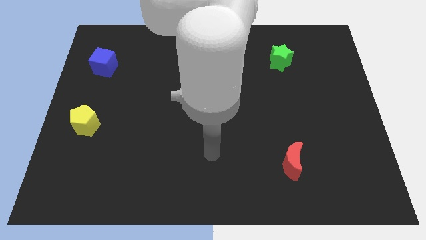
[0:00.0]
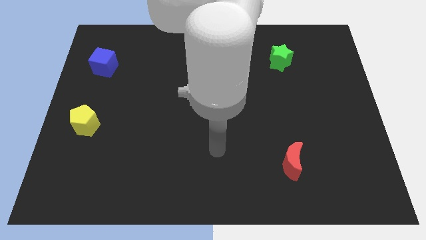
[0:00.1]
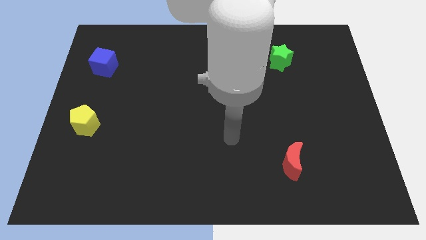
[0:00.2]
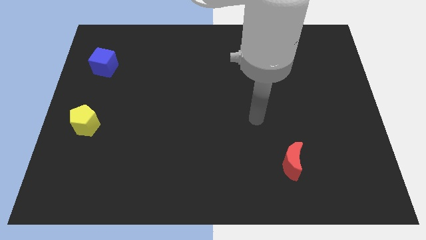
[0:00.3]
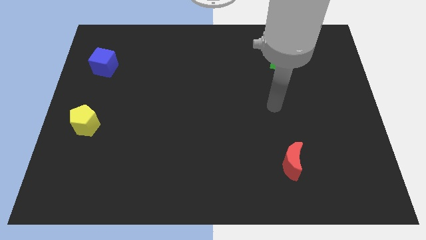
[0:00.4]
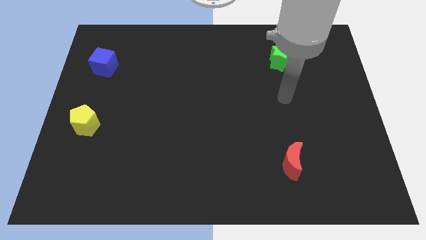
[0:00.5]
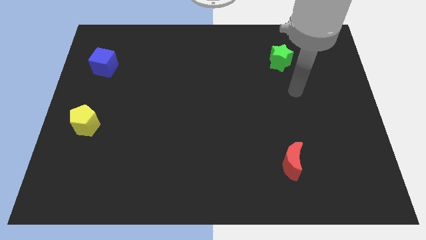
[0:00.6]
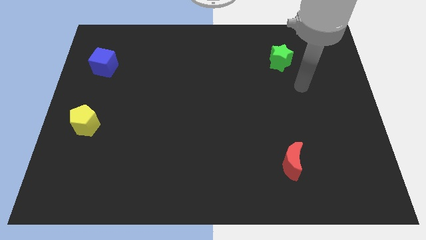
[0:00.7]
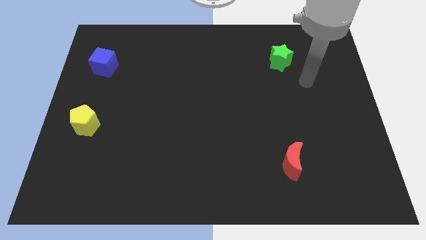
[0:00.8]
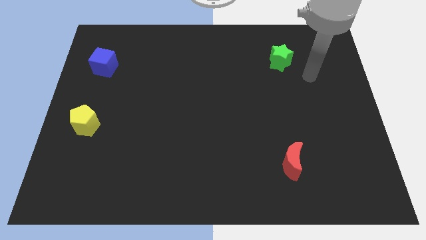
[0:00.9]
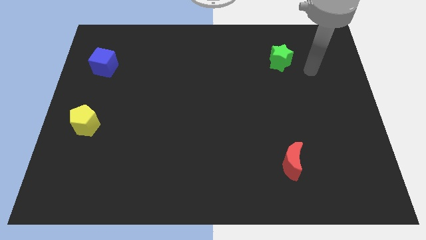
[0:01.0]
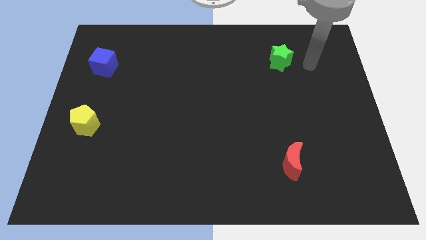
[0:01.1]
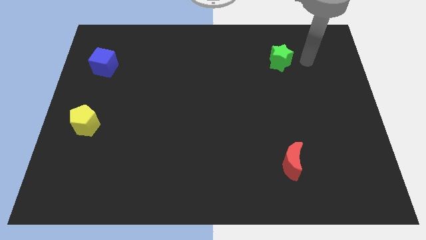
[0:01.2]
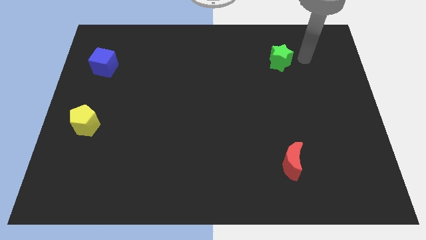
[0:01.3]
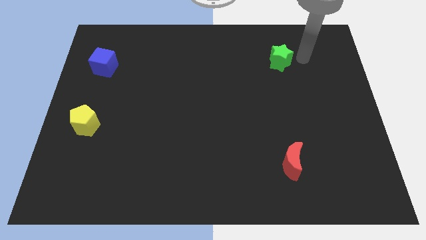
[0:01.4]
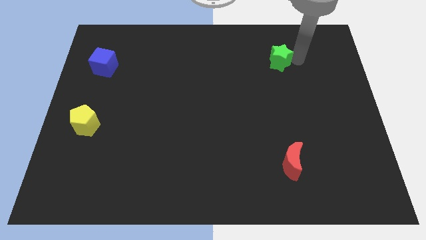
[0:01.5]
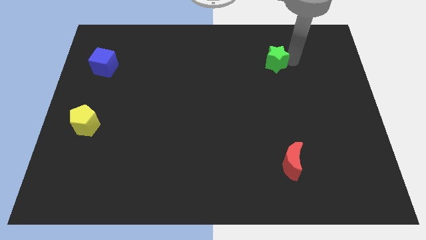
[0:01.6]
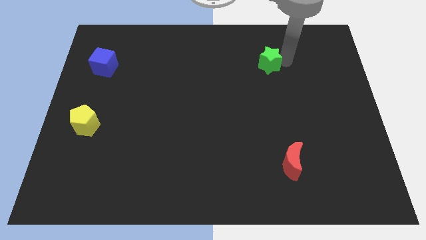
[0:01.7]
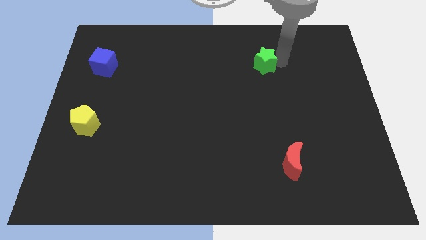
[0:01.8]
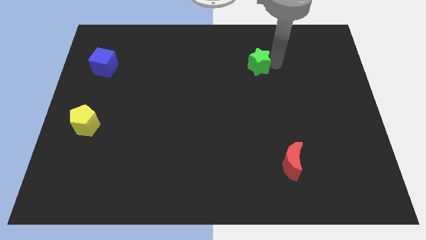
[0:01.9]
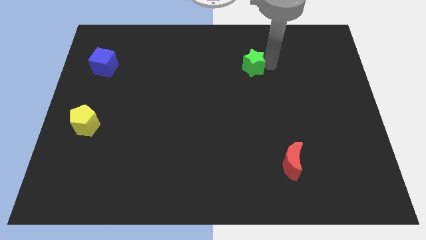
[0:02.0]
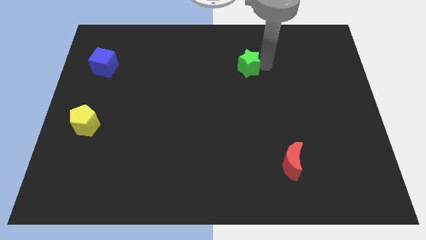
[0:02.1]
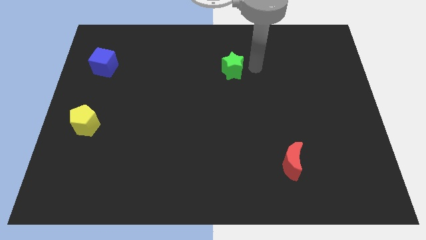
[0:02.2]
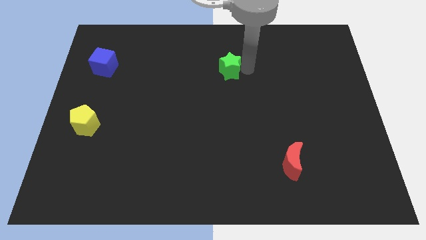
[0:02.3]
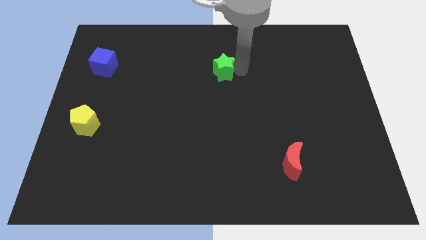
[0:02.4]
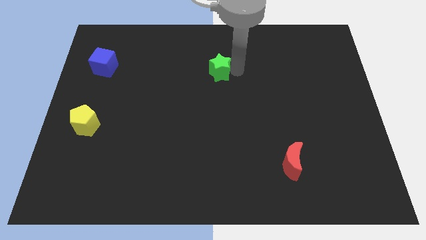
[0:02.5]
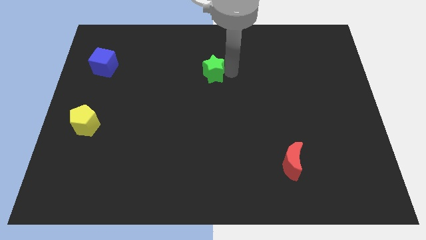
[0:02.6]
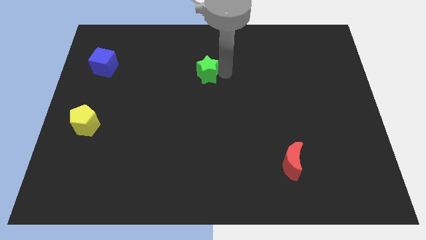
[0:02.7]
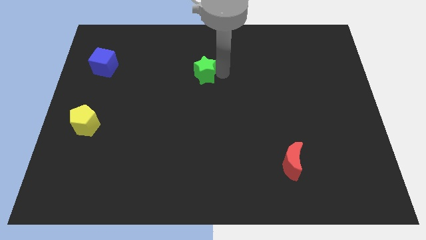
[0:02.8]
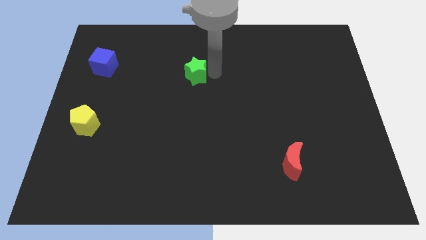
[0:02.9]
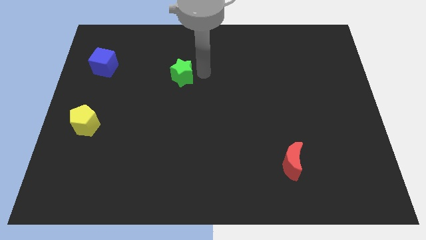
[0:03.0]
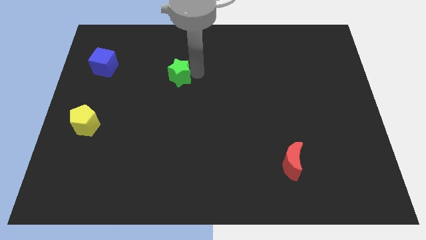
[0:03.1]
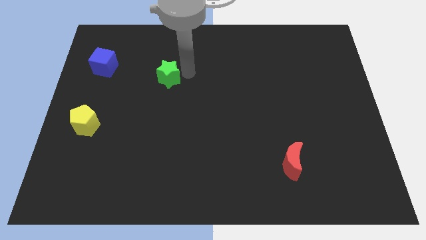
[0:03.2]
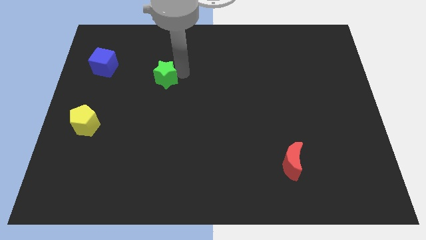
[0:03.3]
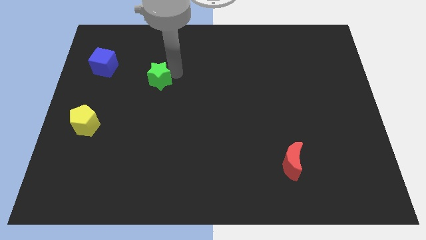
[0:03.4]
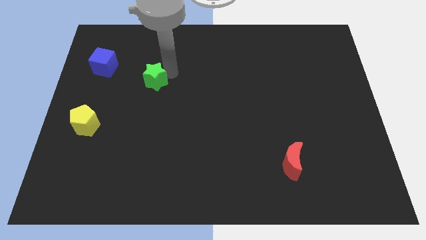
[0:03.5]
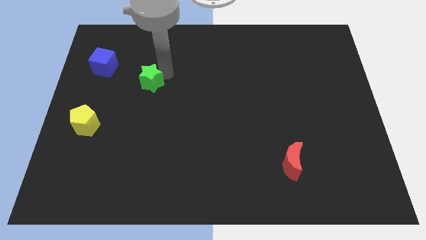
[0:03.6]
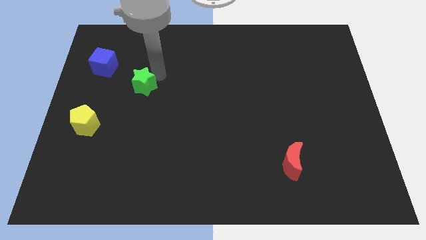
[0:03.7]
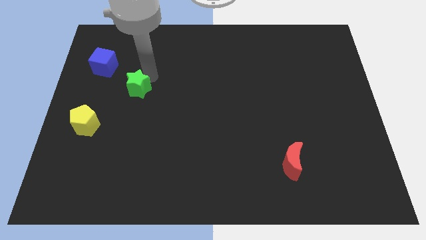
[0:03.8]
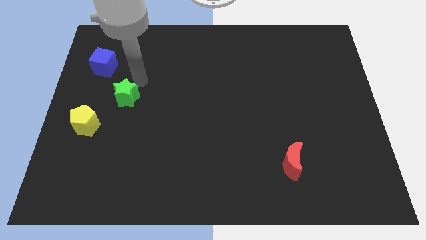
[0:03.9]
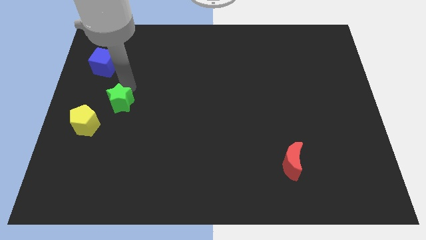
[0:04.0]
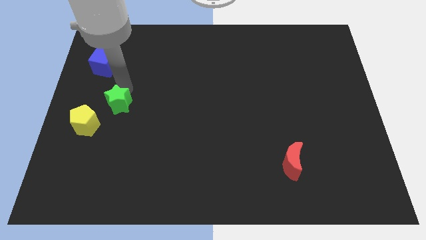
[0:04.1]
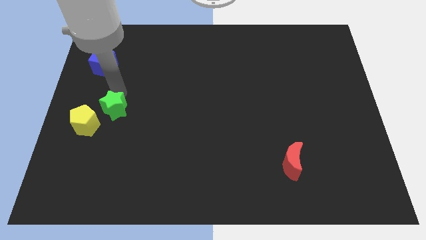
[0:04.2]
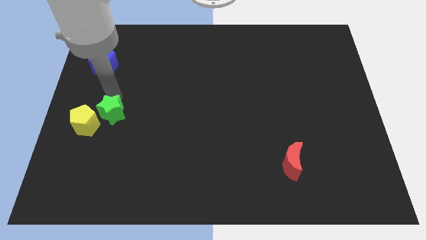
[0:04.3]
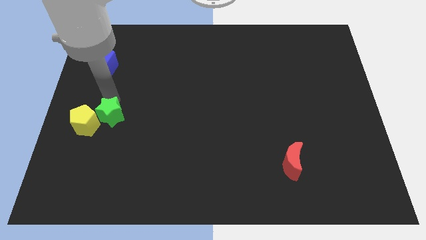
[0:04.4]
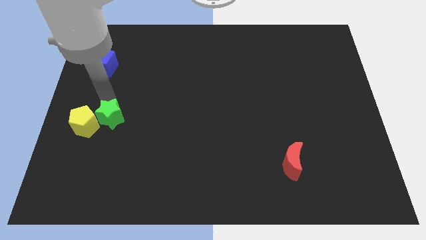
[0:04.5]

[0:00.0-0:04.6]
put the green star close to the pentagon

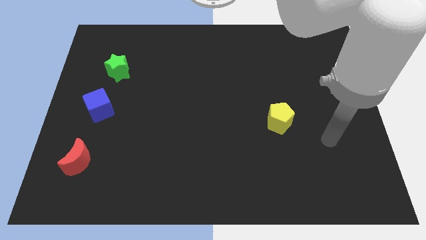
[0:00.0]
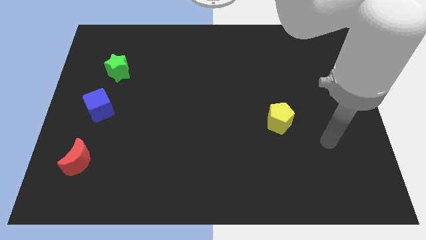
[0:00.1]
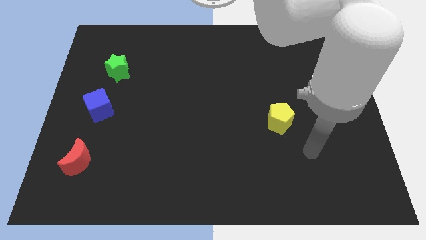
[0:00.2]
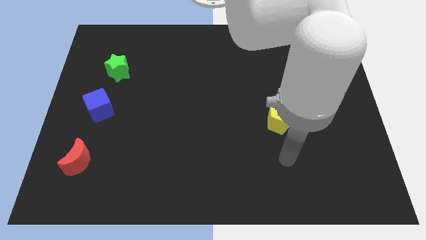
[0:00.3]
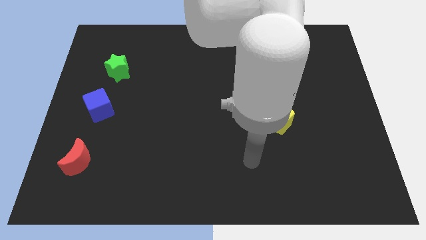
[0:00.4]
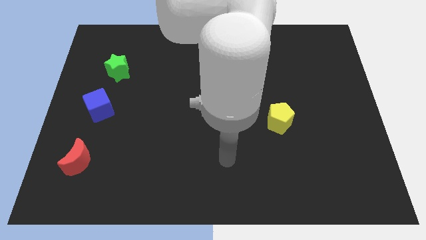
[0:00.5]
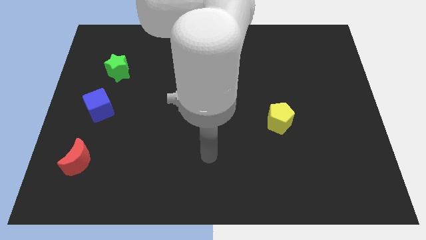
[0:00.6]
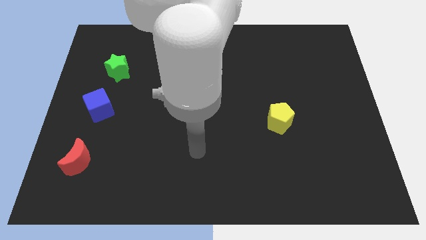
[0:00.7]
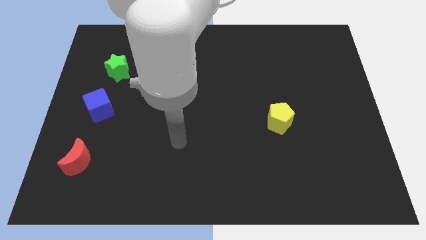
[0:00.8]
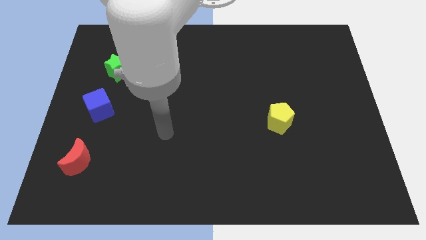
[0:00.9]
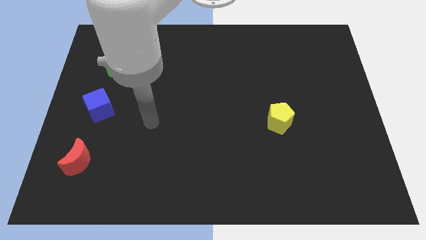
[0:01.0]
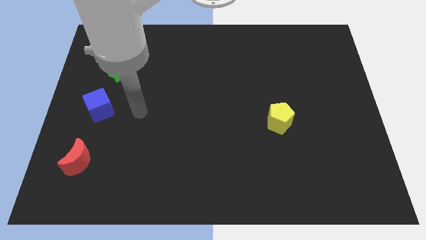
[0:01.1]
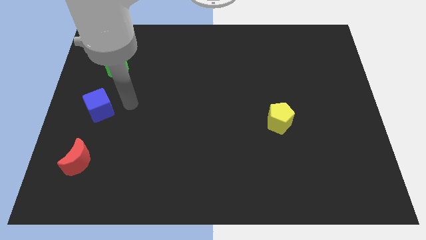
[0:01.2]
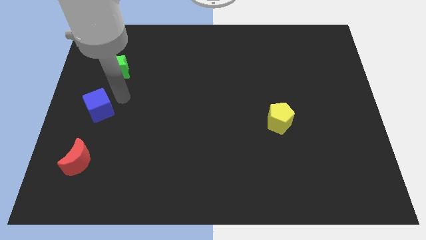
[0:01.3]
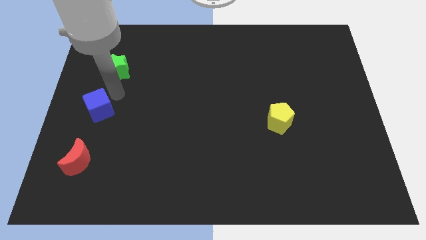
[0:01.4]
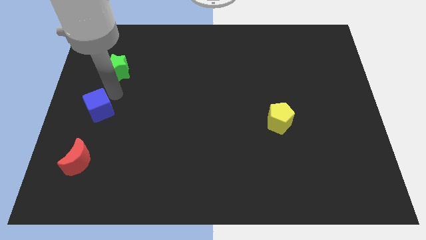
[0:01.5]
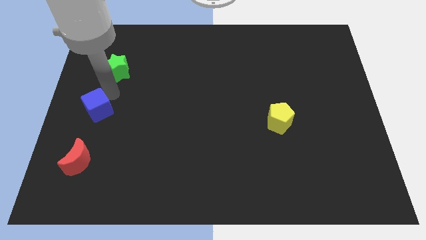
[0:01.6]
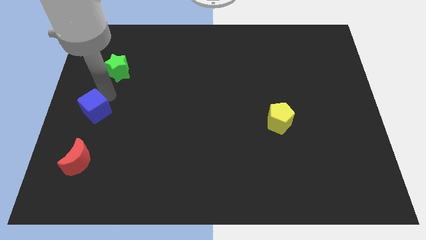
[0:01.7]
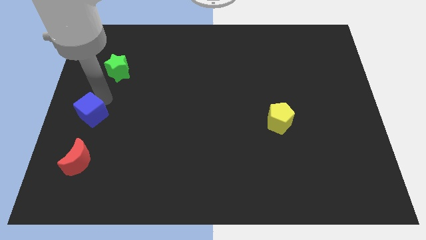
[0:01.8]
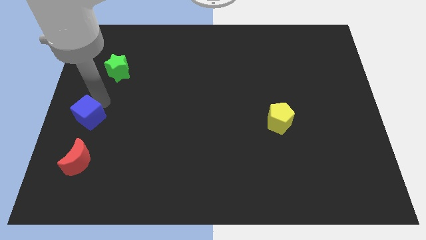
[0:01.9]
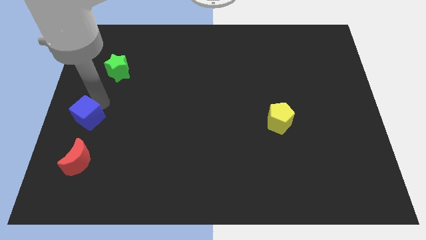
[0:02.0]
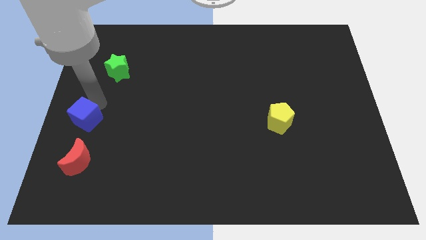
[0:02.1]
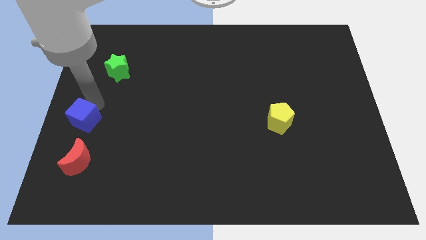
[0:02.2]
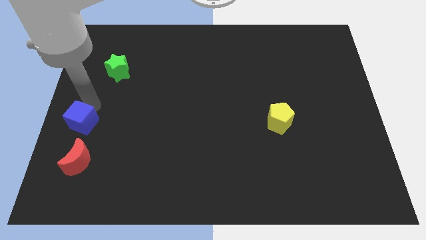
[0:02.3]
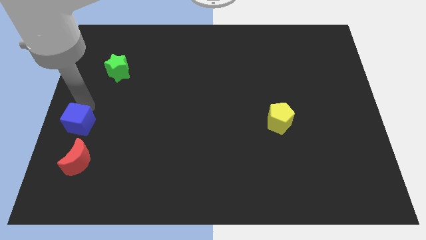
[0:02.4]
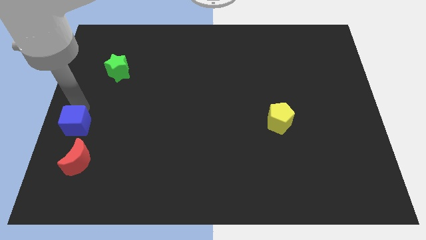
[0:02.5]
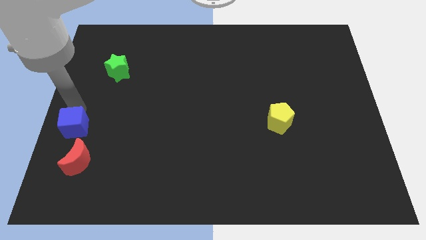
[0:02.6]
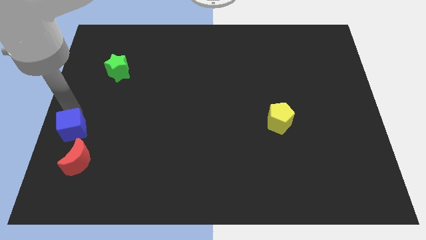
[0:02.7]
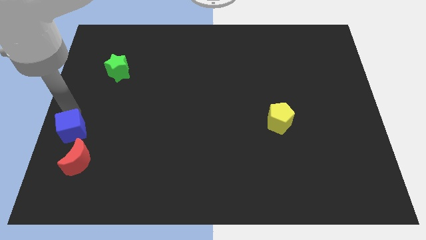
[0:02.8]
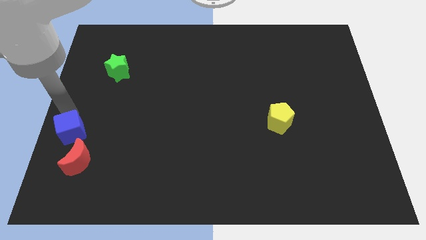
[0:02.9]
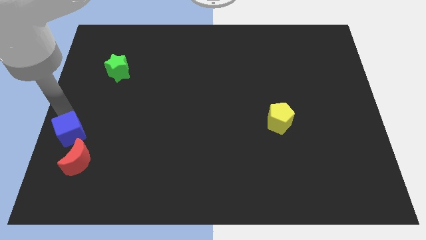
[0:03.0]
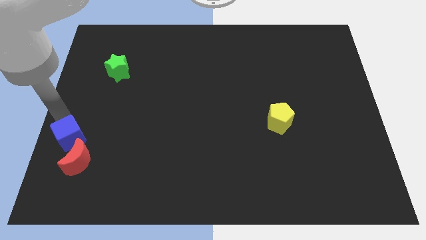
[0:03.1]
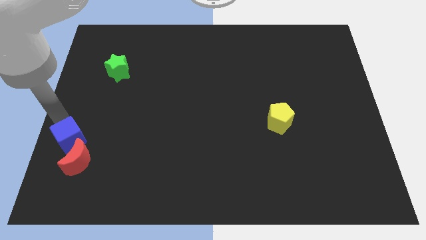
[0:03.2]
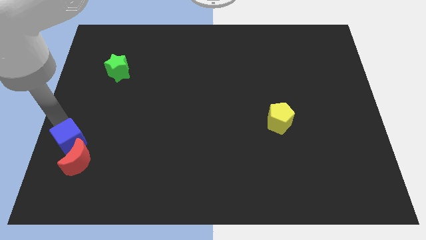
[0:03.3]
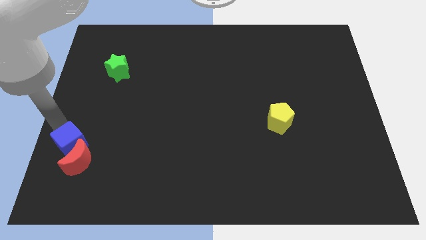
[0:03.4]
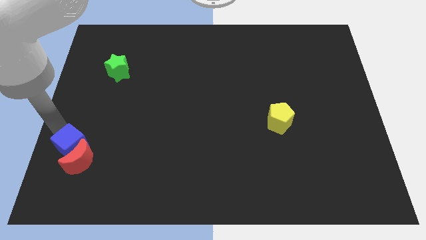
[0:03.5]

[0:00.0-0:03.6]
slide the blue block towards the red moon
